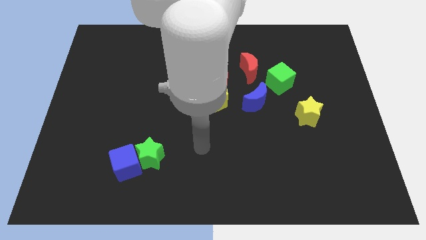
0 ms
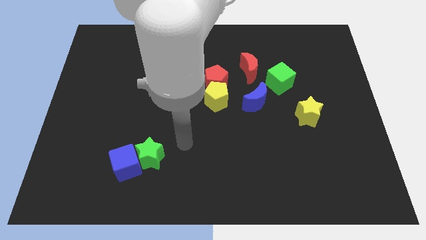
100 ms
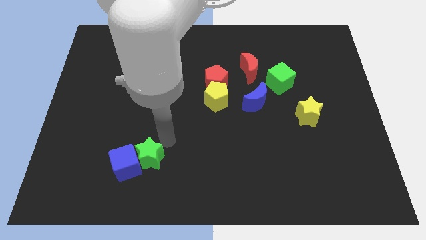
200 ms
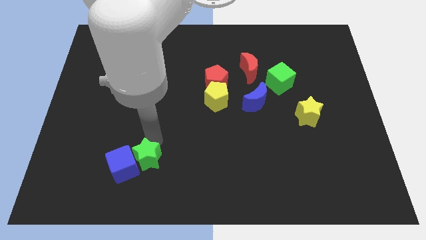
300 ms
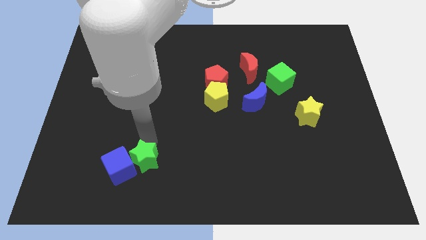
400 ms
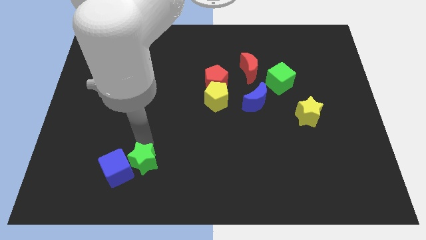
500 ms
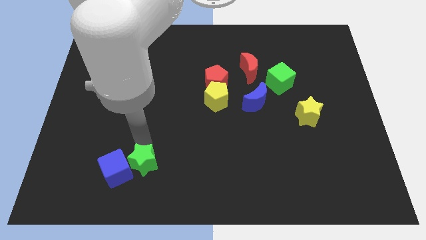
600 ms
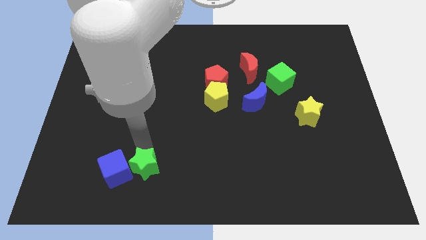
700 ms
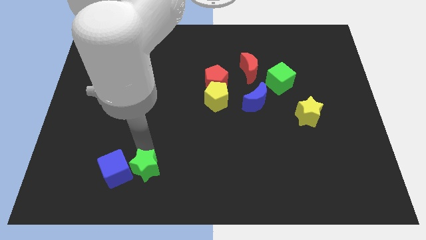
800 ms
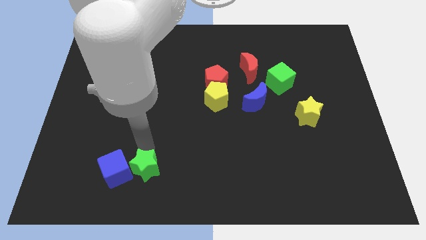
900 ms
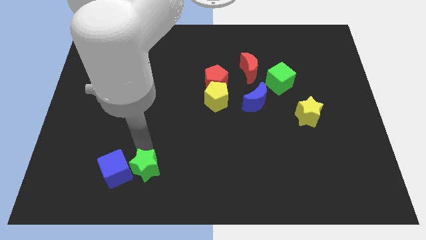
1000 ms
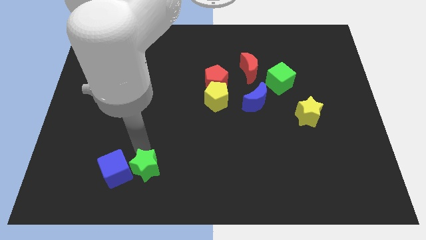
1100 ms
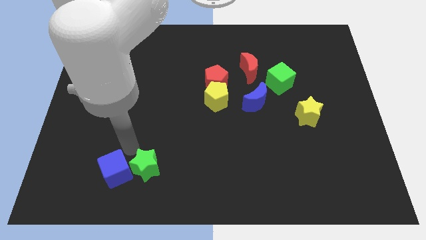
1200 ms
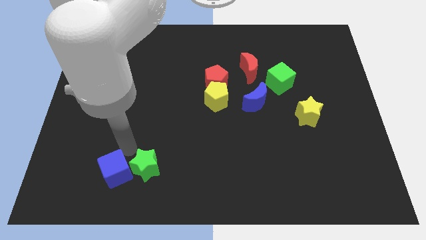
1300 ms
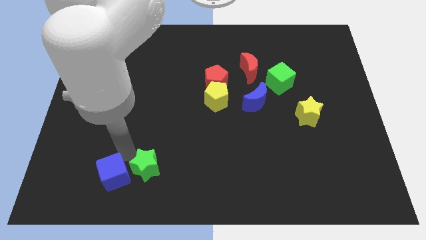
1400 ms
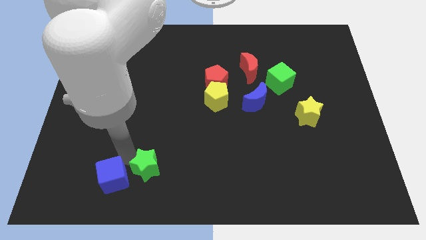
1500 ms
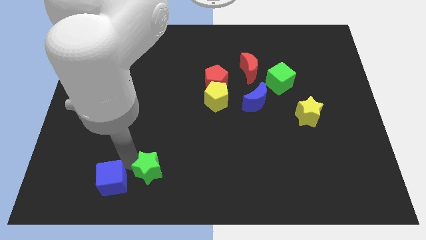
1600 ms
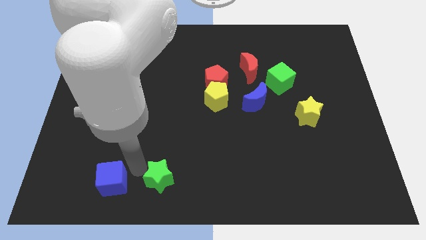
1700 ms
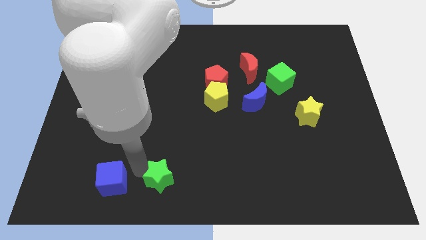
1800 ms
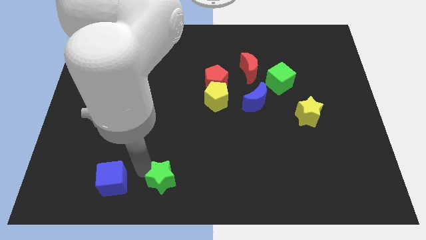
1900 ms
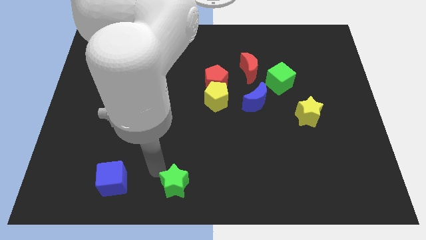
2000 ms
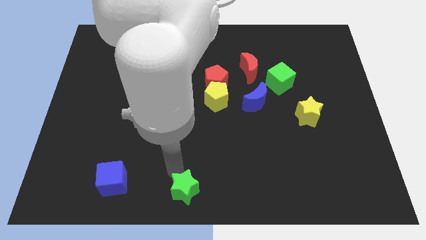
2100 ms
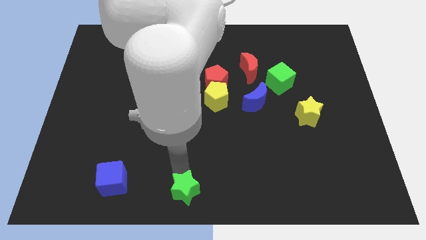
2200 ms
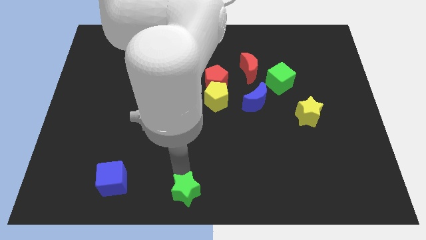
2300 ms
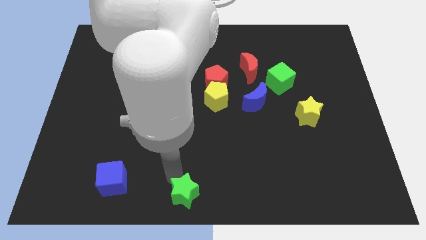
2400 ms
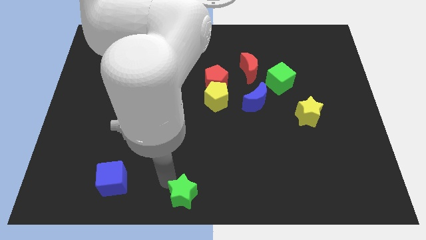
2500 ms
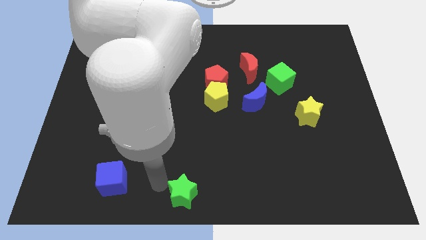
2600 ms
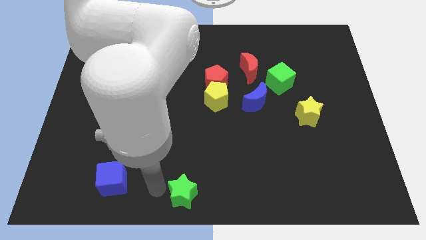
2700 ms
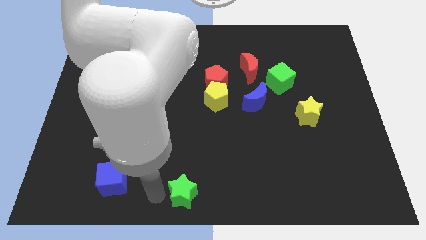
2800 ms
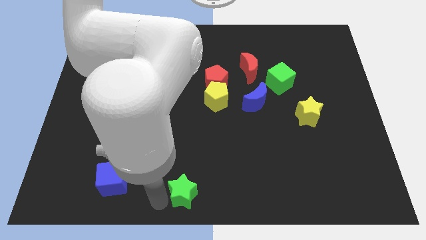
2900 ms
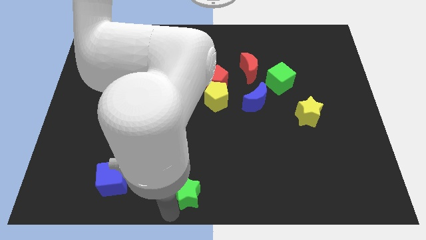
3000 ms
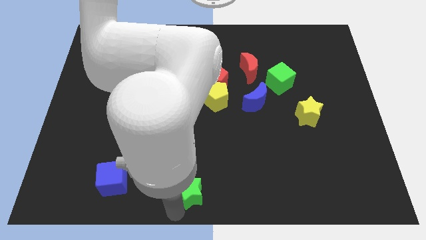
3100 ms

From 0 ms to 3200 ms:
push the green star towards the bottom center of the board

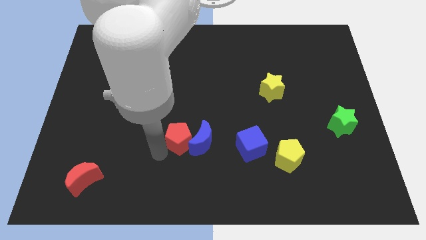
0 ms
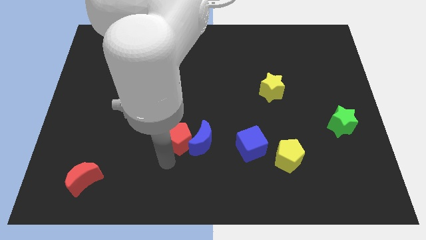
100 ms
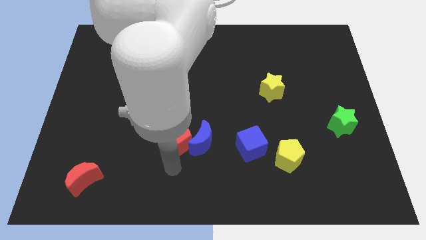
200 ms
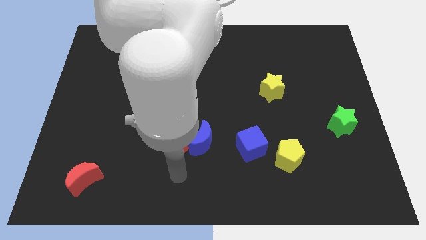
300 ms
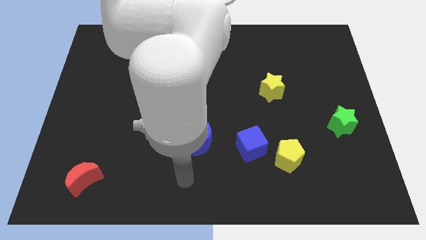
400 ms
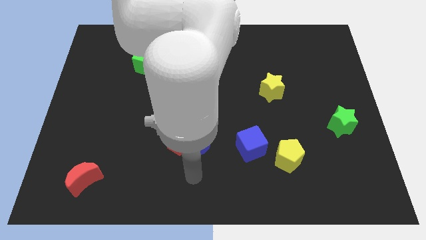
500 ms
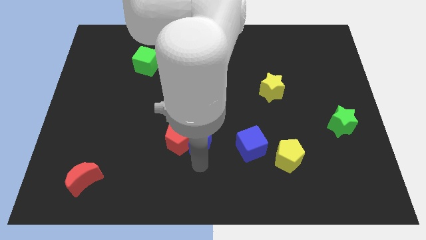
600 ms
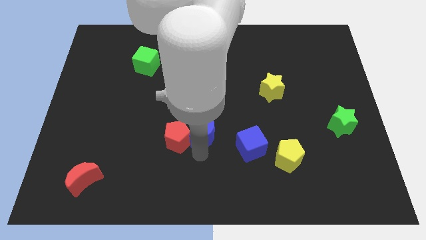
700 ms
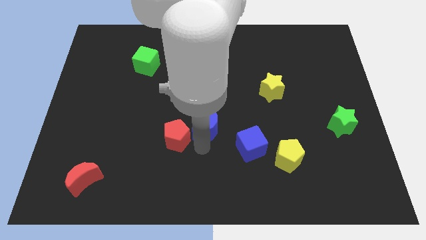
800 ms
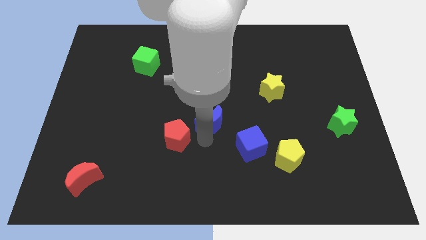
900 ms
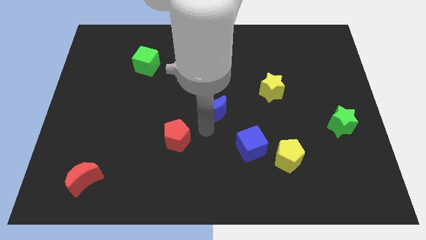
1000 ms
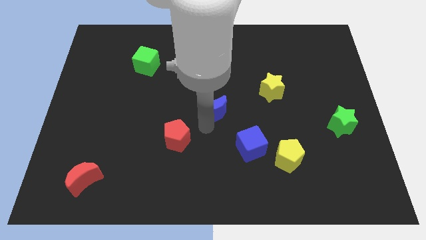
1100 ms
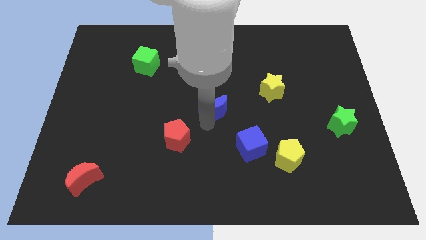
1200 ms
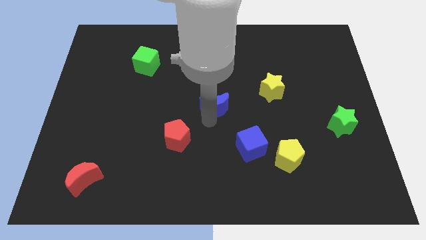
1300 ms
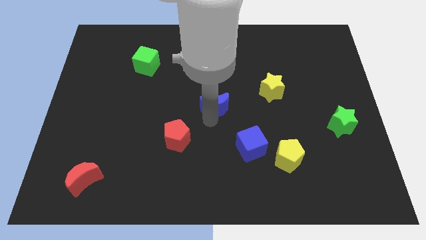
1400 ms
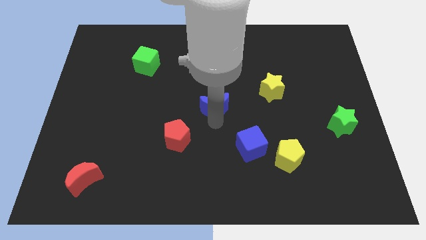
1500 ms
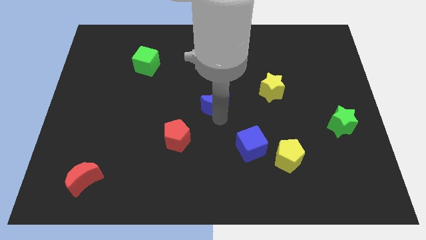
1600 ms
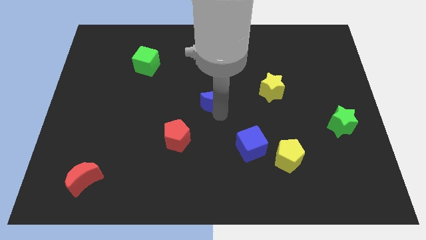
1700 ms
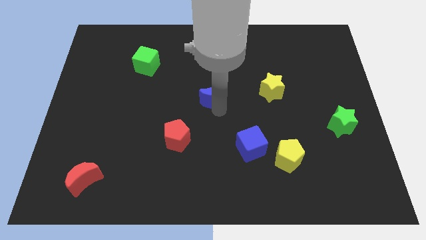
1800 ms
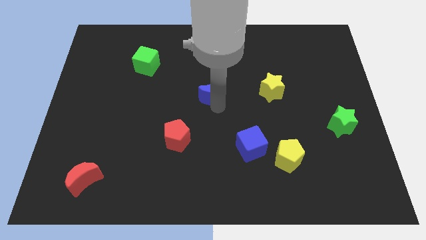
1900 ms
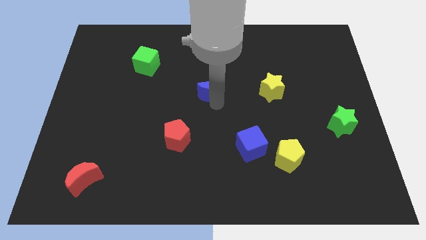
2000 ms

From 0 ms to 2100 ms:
separate blue moon from red pentagon

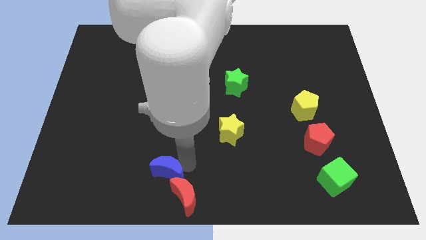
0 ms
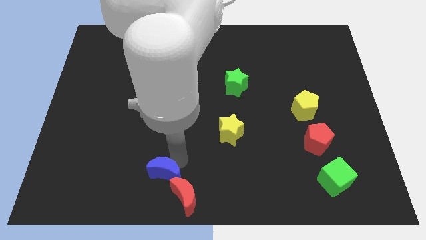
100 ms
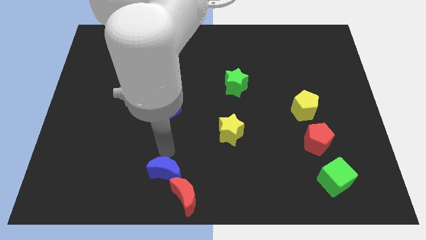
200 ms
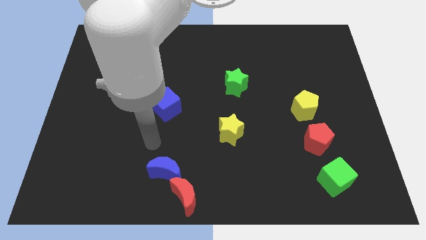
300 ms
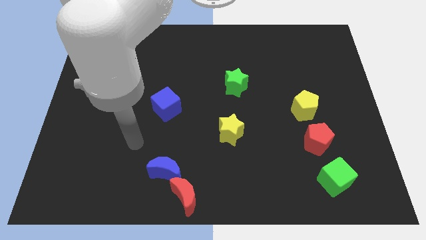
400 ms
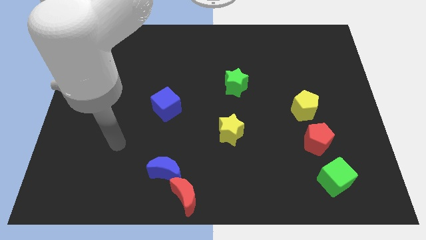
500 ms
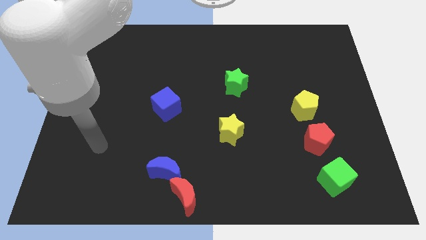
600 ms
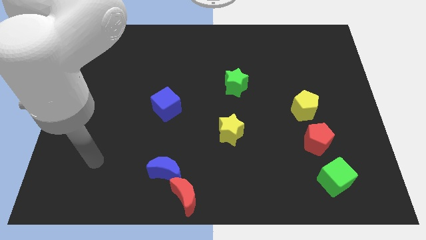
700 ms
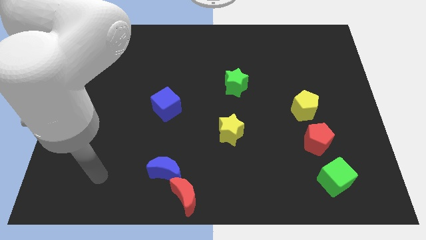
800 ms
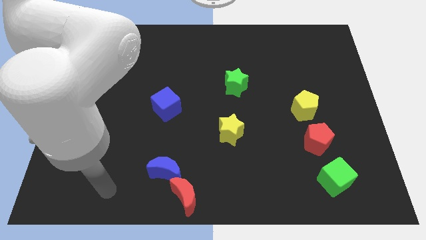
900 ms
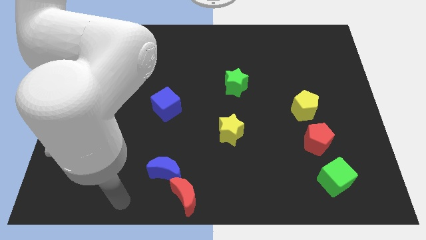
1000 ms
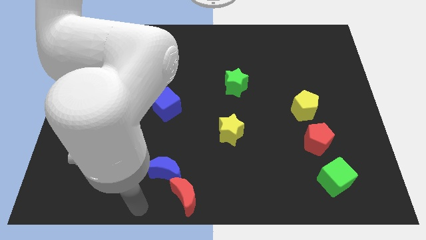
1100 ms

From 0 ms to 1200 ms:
move away from the top side of the blue moon

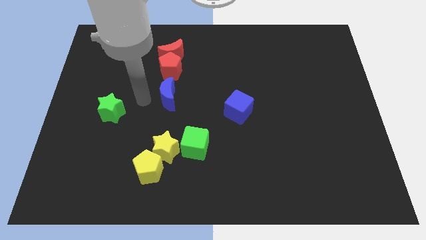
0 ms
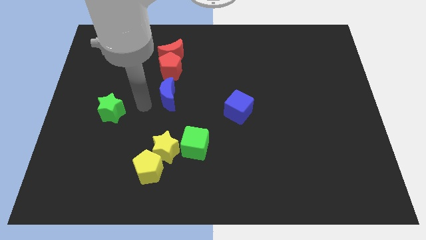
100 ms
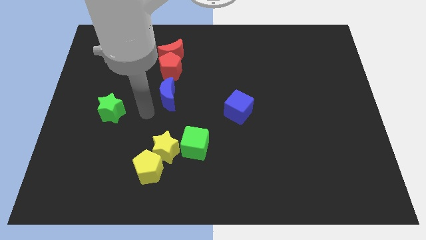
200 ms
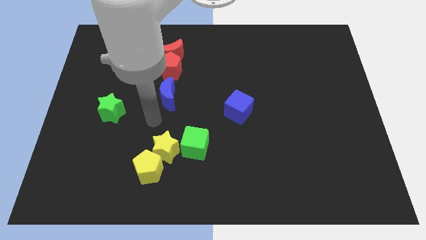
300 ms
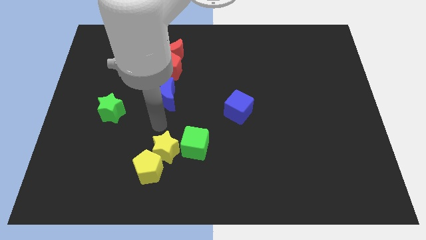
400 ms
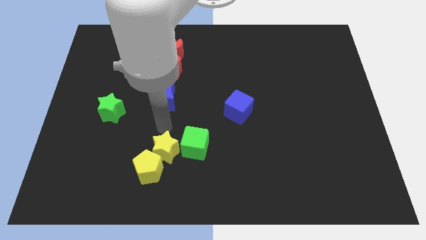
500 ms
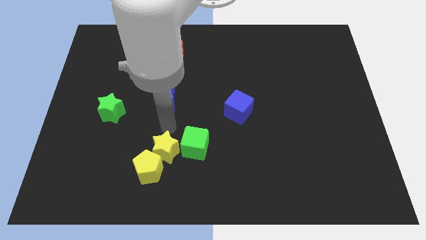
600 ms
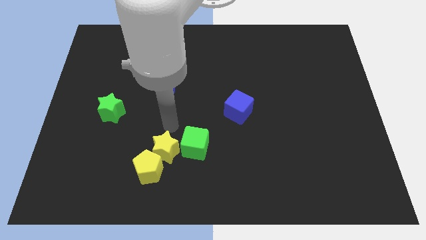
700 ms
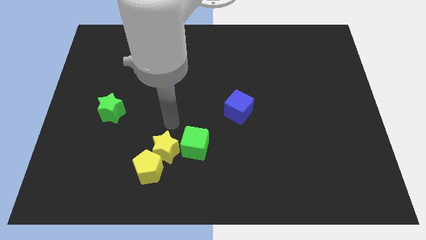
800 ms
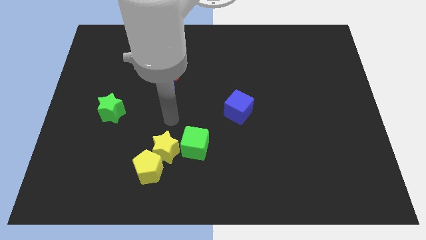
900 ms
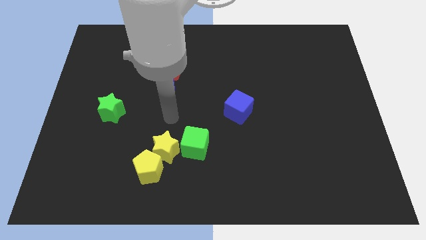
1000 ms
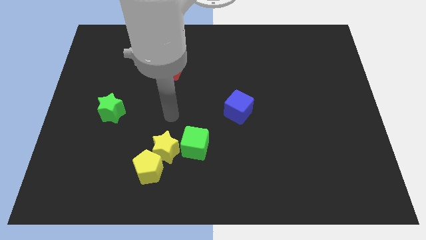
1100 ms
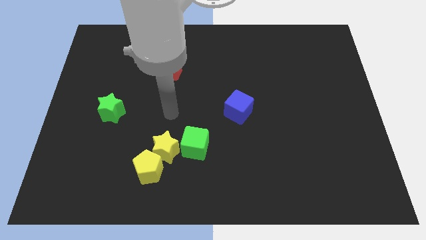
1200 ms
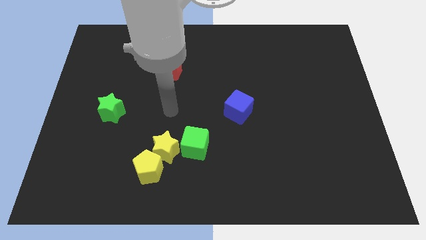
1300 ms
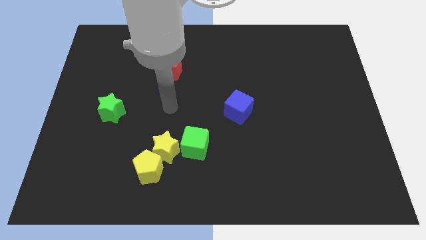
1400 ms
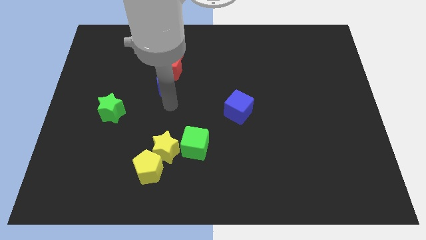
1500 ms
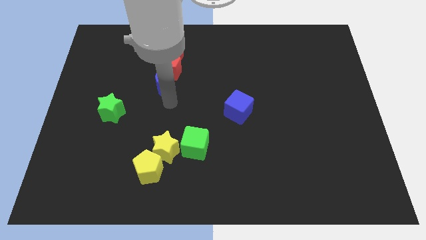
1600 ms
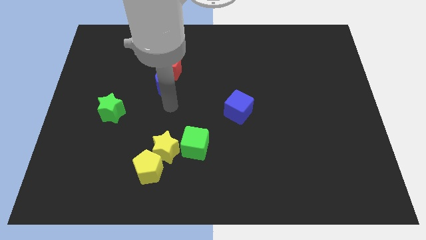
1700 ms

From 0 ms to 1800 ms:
adjust the blue crescent below red pentagon

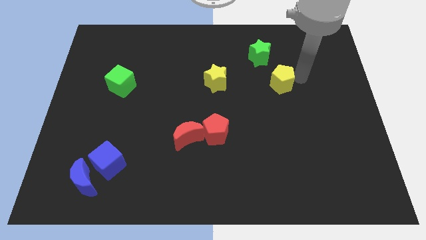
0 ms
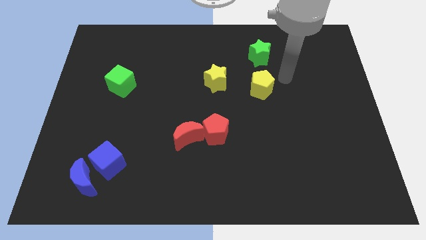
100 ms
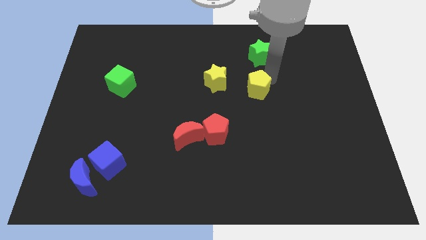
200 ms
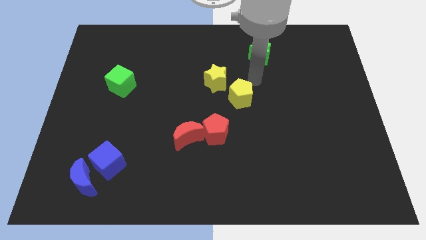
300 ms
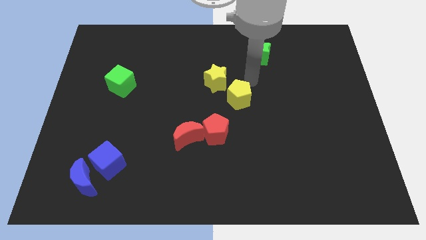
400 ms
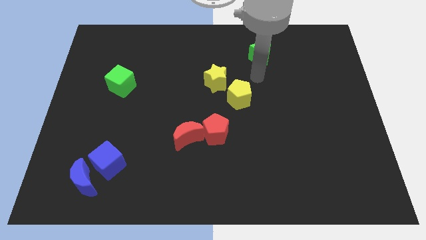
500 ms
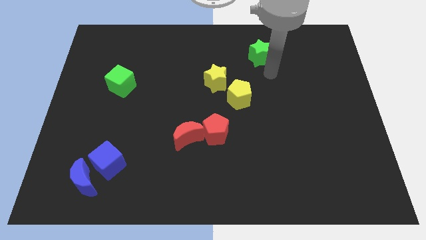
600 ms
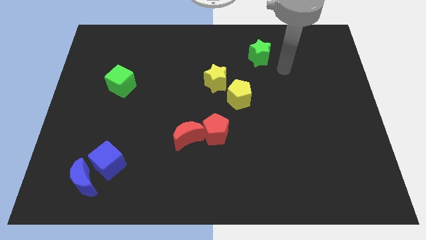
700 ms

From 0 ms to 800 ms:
put the yellow pentagon at the bottom right of the yellow star
